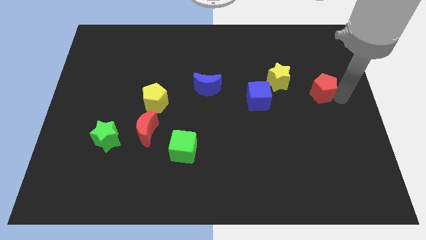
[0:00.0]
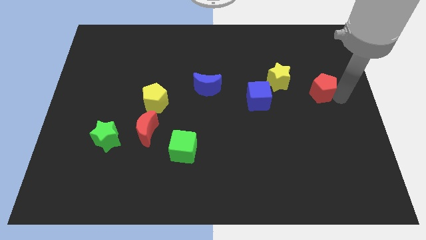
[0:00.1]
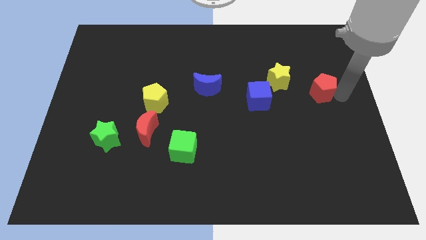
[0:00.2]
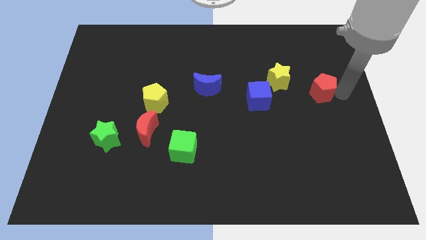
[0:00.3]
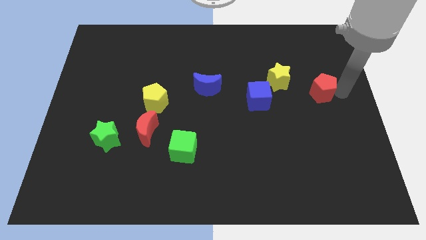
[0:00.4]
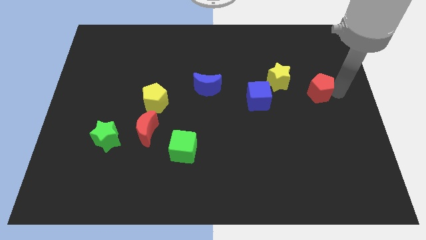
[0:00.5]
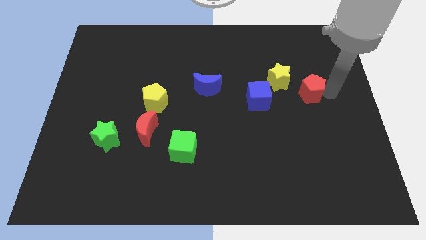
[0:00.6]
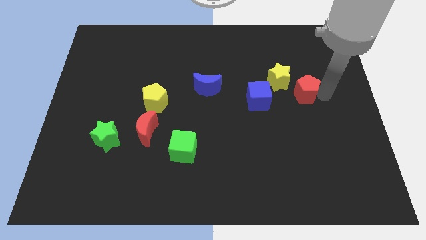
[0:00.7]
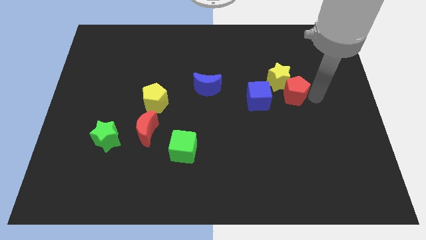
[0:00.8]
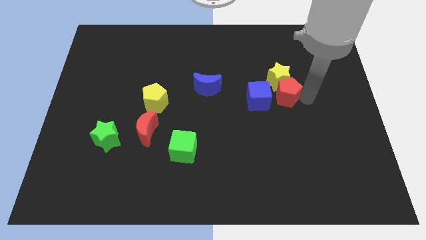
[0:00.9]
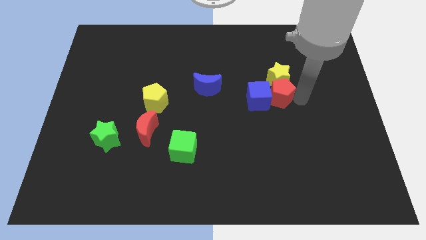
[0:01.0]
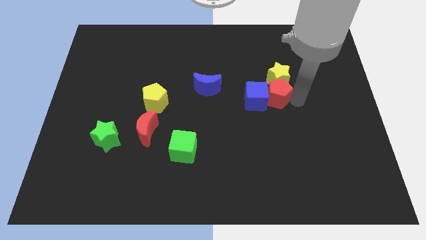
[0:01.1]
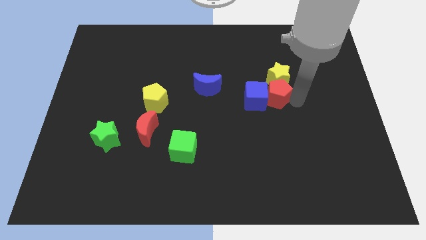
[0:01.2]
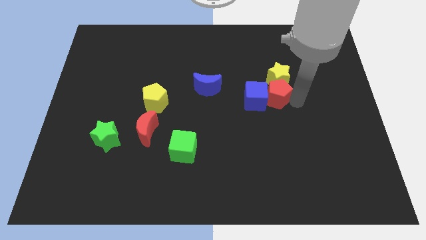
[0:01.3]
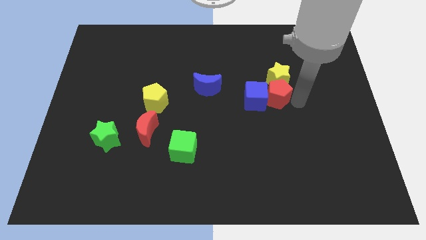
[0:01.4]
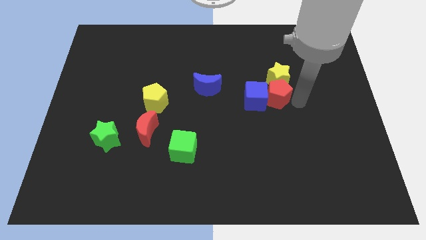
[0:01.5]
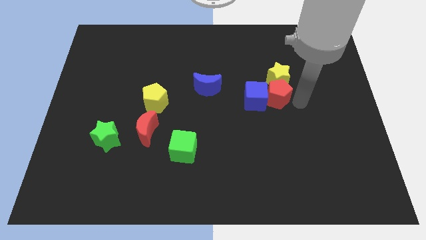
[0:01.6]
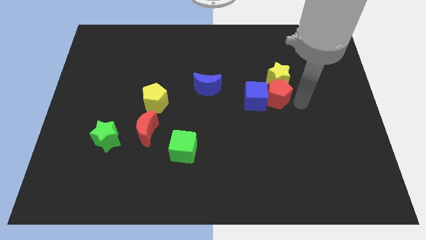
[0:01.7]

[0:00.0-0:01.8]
place the red pentagon down to the yellow star

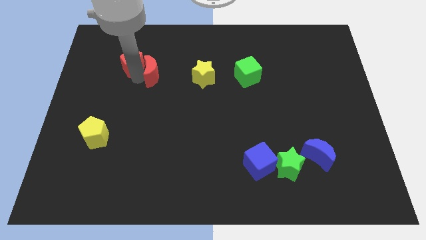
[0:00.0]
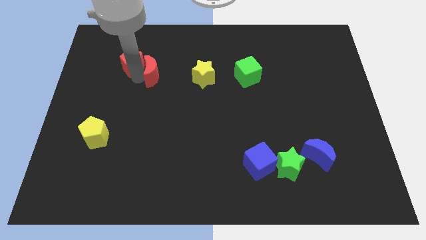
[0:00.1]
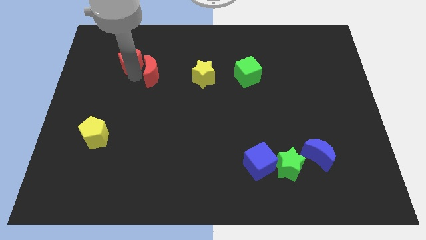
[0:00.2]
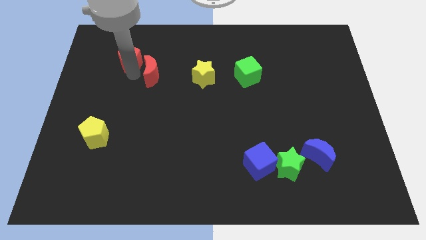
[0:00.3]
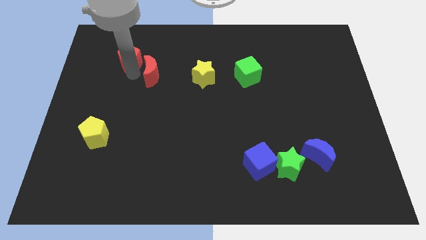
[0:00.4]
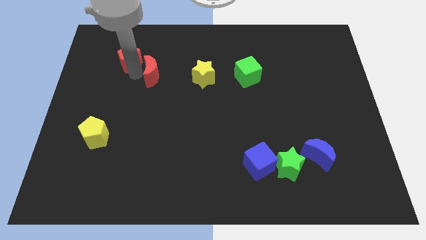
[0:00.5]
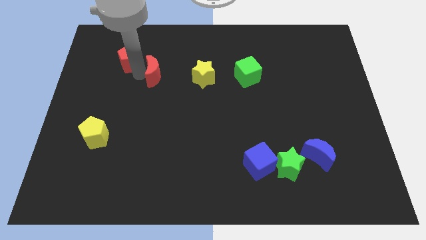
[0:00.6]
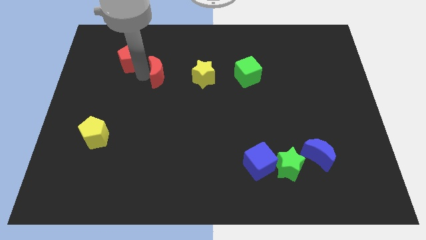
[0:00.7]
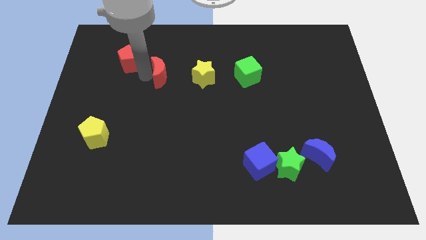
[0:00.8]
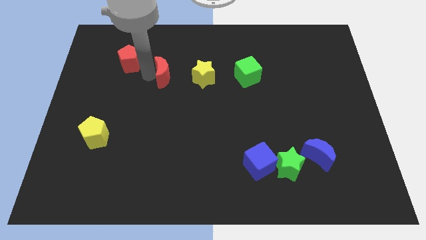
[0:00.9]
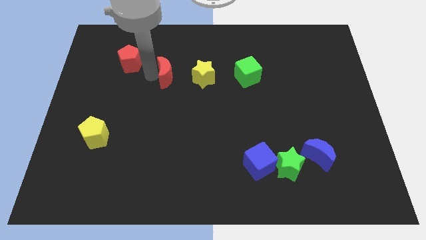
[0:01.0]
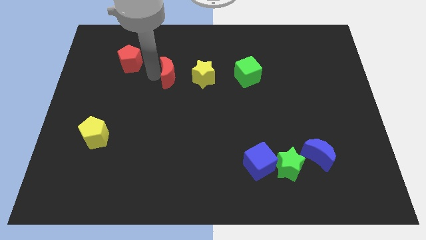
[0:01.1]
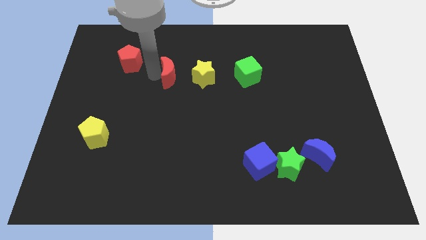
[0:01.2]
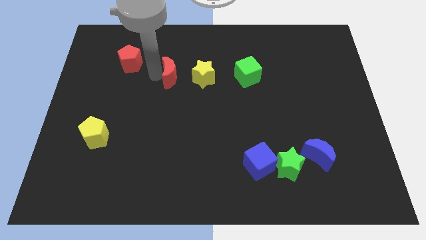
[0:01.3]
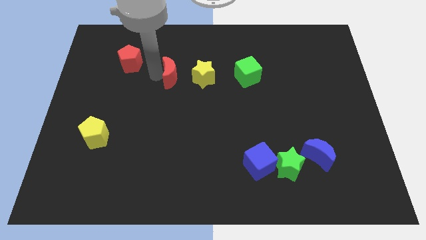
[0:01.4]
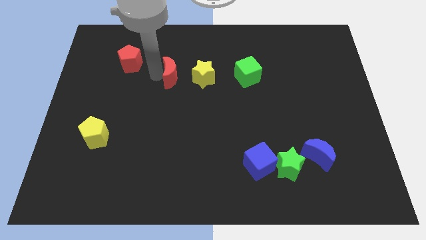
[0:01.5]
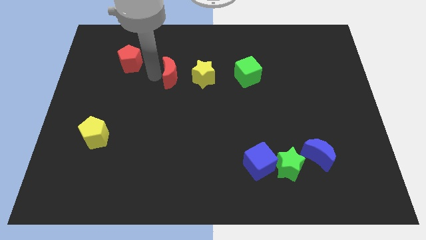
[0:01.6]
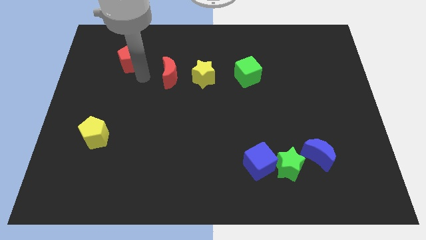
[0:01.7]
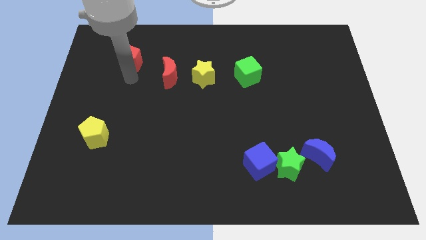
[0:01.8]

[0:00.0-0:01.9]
go and separate the group of red blocks

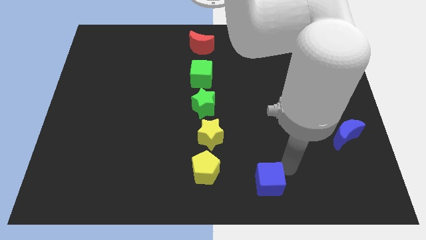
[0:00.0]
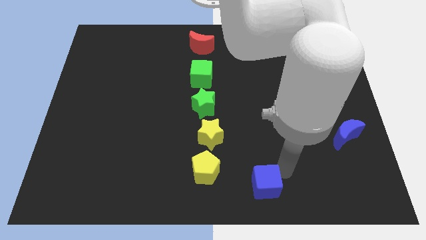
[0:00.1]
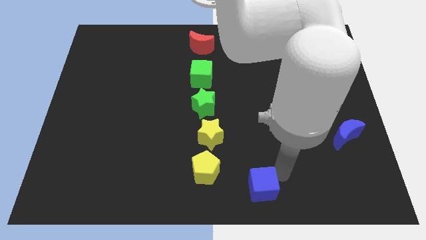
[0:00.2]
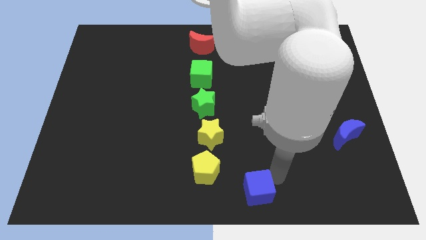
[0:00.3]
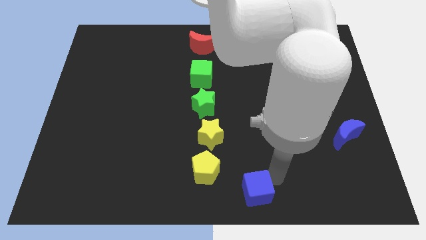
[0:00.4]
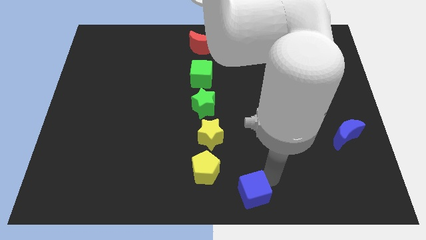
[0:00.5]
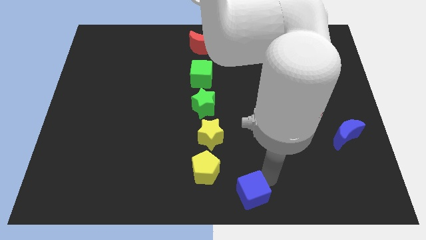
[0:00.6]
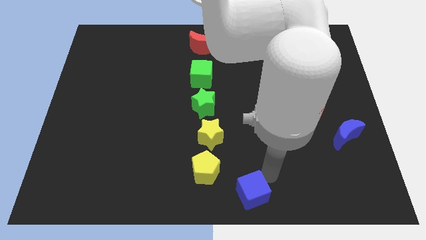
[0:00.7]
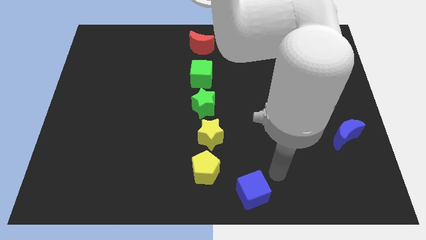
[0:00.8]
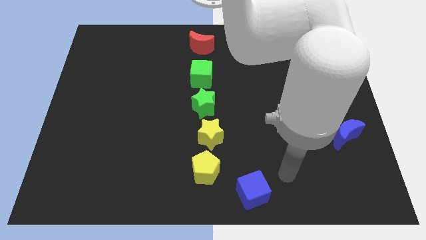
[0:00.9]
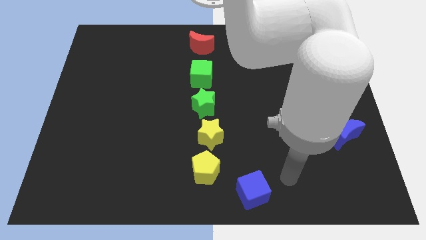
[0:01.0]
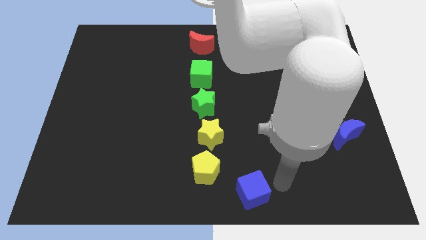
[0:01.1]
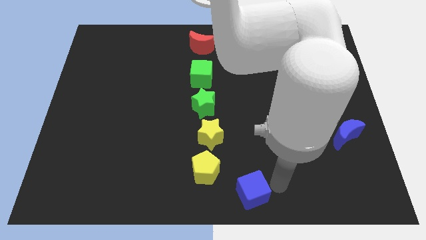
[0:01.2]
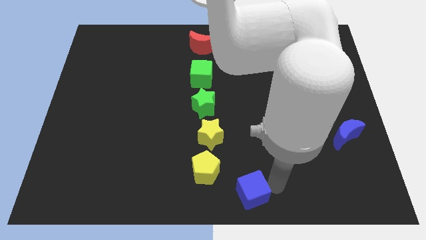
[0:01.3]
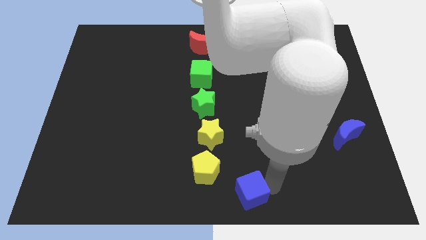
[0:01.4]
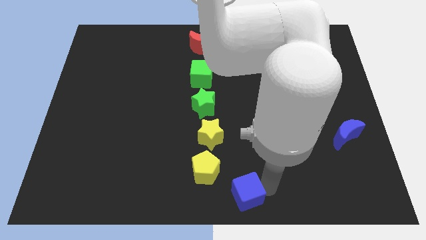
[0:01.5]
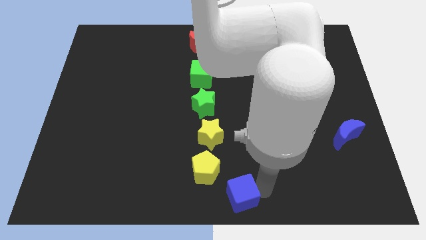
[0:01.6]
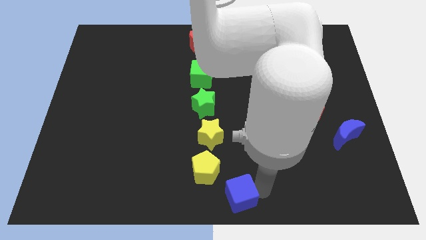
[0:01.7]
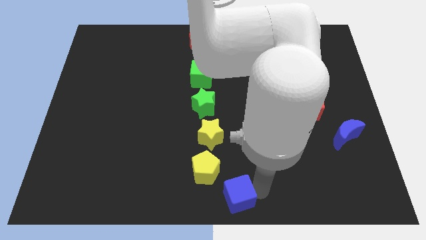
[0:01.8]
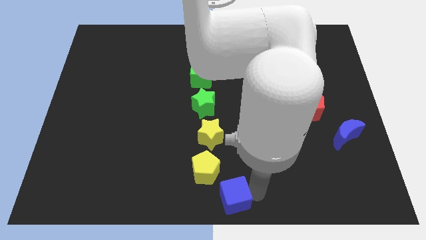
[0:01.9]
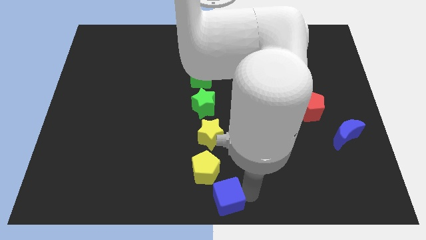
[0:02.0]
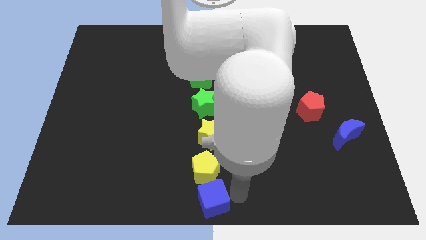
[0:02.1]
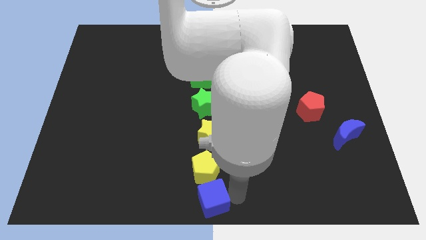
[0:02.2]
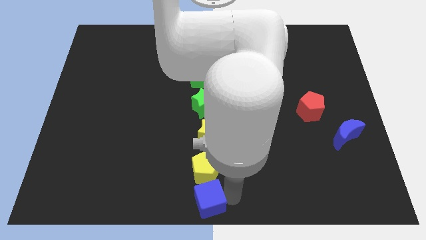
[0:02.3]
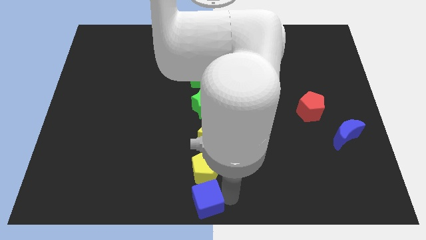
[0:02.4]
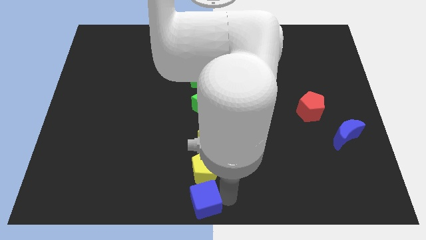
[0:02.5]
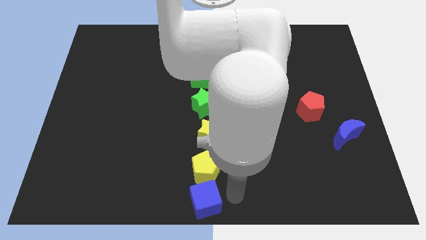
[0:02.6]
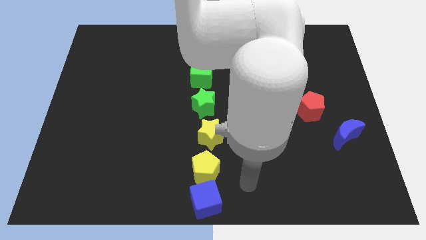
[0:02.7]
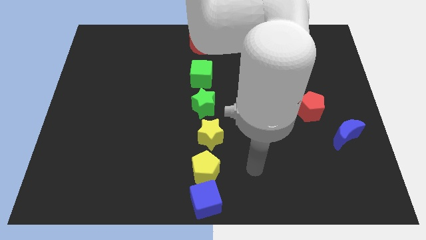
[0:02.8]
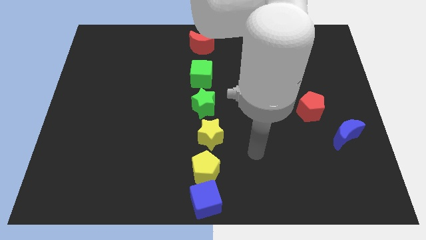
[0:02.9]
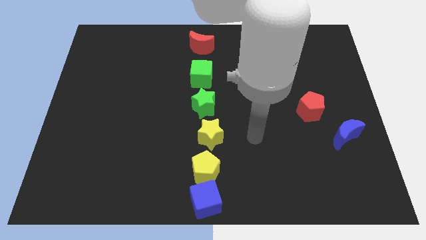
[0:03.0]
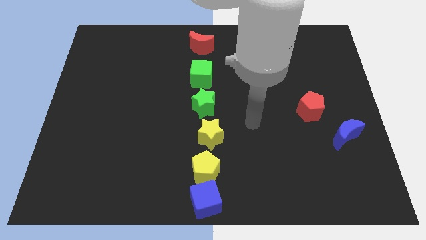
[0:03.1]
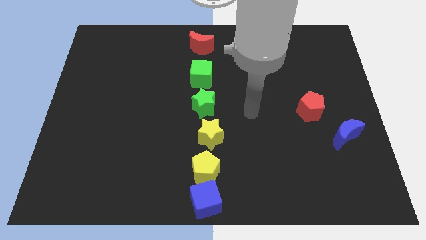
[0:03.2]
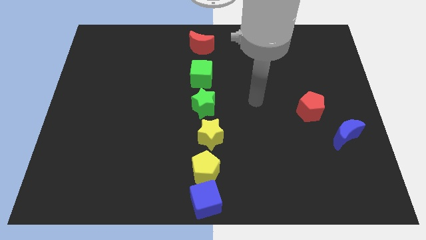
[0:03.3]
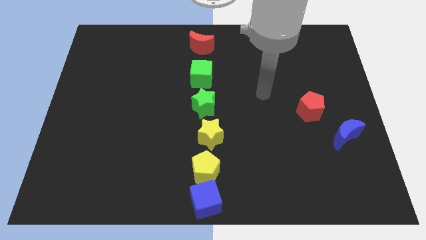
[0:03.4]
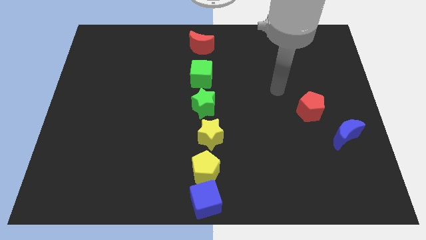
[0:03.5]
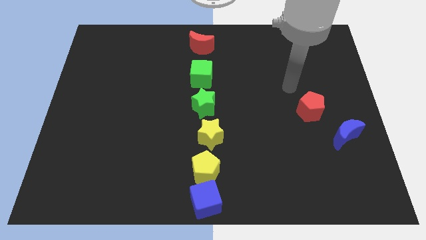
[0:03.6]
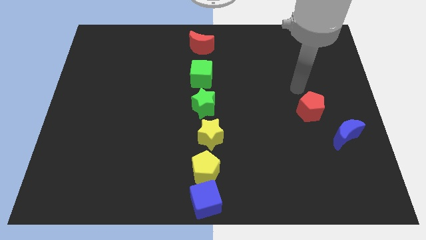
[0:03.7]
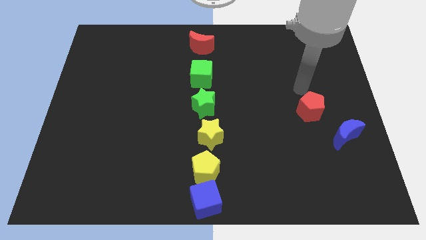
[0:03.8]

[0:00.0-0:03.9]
place the blue cube below the yellow pentagon

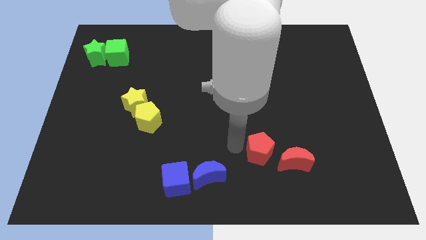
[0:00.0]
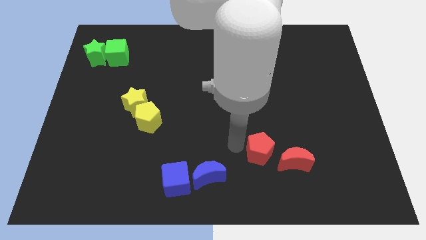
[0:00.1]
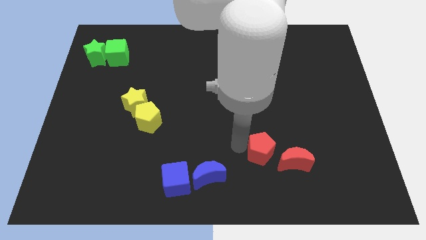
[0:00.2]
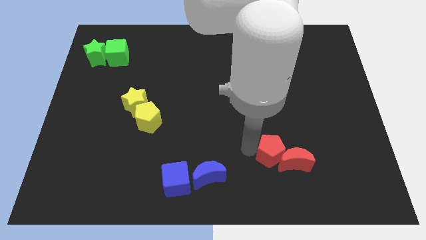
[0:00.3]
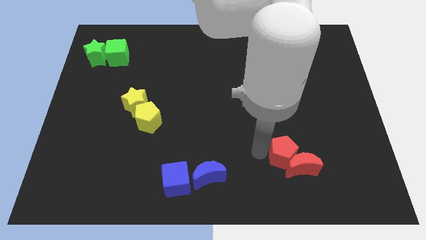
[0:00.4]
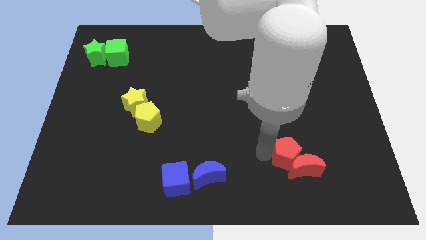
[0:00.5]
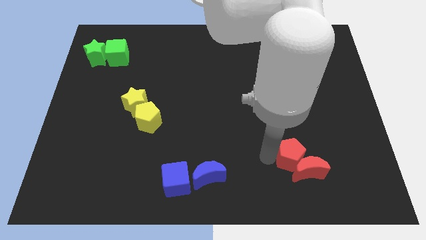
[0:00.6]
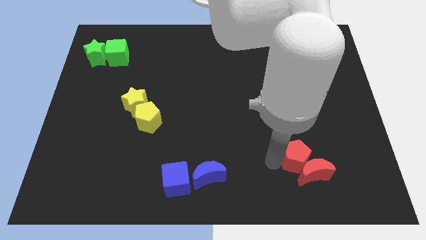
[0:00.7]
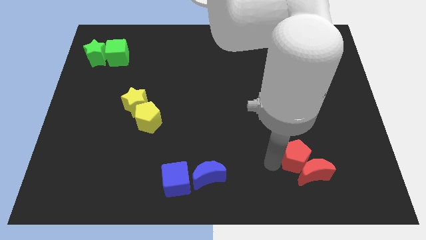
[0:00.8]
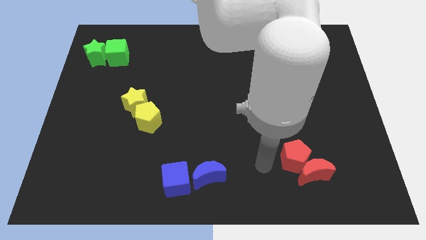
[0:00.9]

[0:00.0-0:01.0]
move the red pentagon along with the red crescent to the bottom right of the board

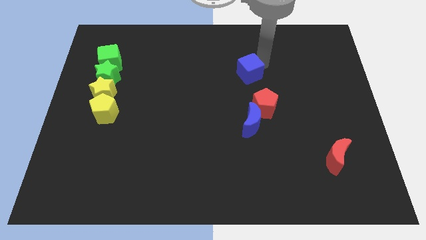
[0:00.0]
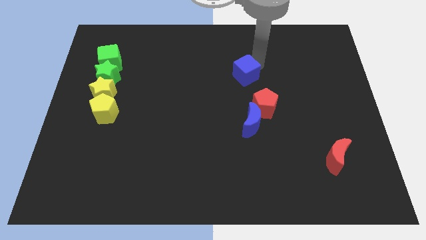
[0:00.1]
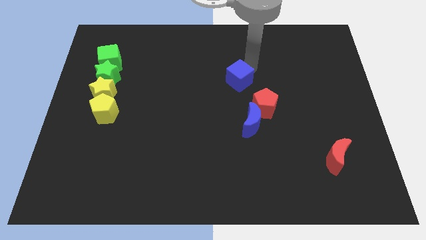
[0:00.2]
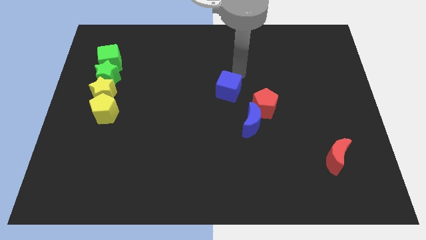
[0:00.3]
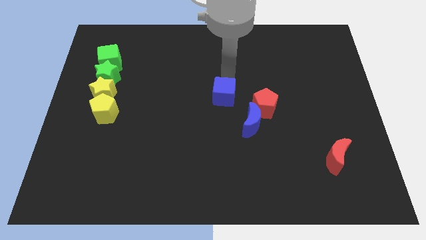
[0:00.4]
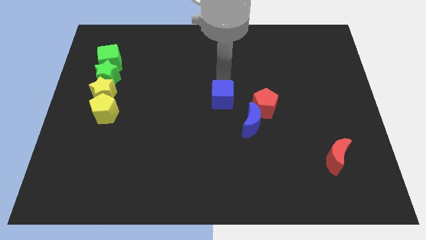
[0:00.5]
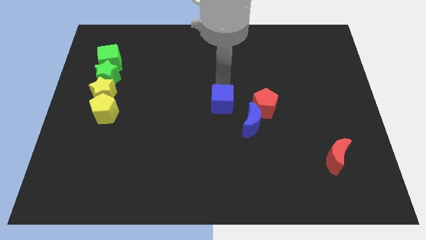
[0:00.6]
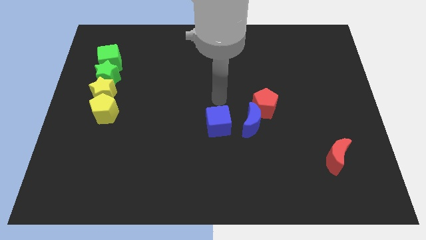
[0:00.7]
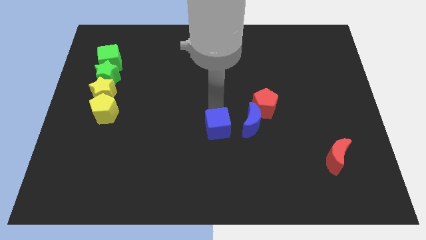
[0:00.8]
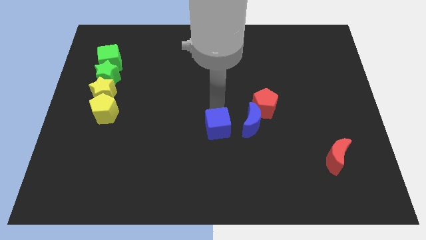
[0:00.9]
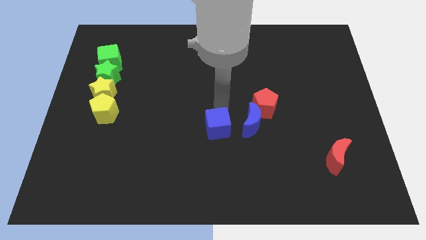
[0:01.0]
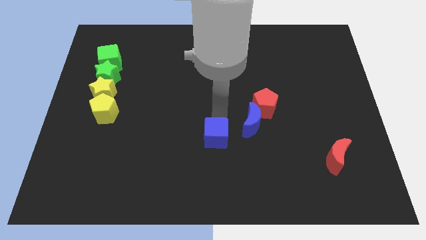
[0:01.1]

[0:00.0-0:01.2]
push the blue cube to the left of the blue crescent
